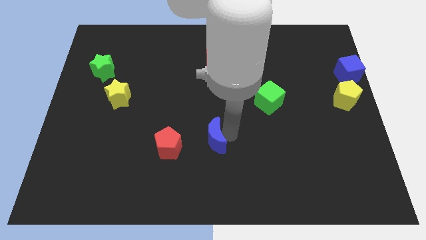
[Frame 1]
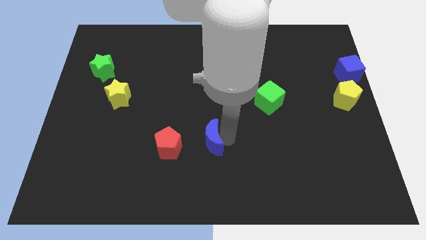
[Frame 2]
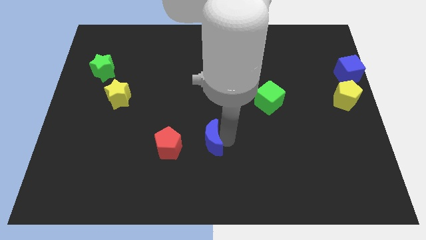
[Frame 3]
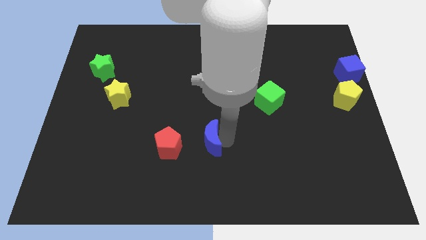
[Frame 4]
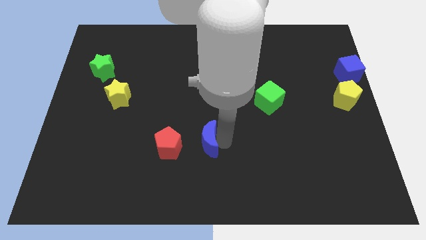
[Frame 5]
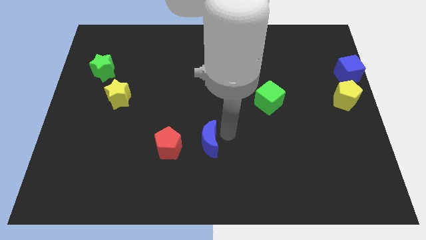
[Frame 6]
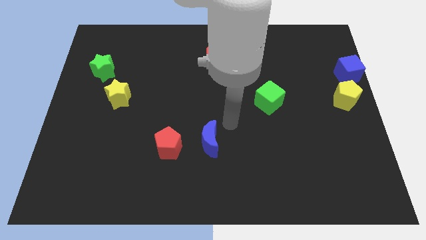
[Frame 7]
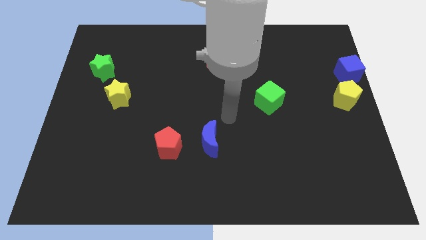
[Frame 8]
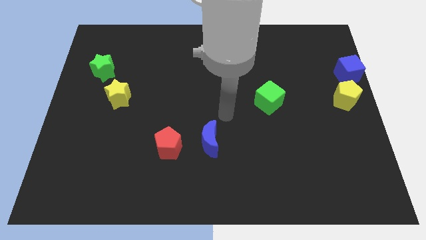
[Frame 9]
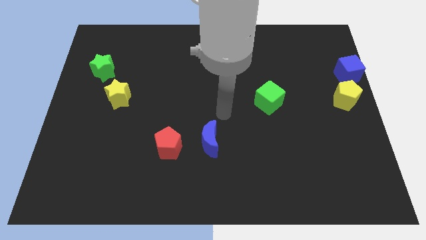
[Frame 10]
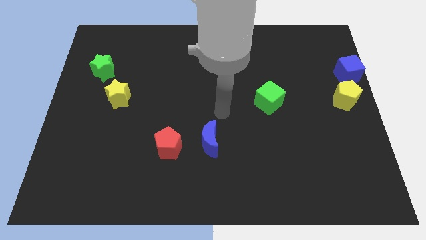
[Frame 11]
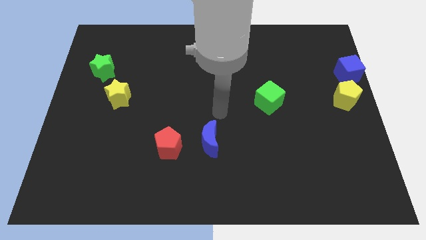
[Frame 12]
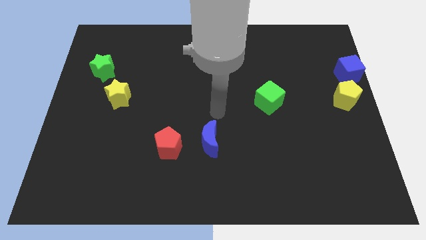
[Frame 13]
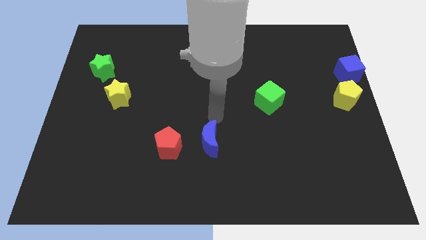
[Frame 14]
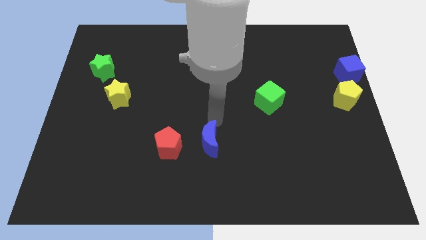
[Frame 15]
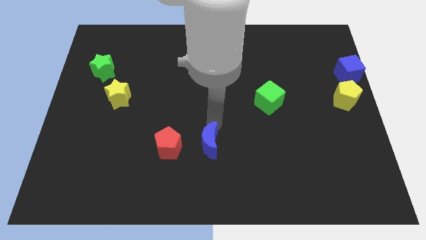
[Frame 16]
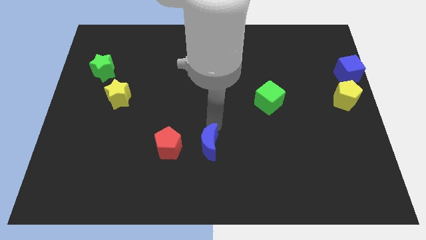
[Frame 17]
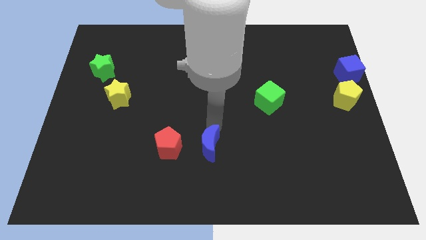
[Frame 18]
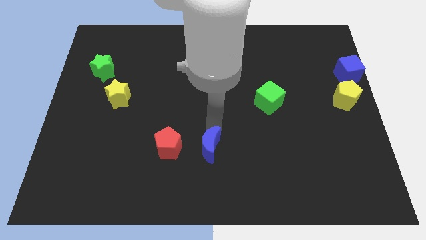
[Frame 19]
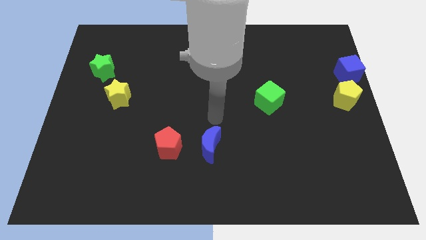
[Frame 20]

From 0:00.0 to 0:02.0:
put the blue crescent on the right side of the red pentagon

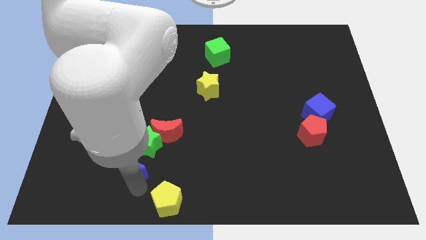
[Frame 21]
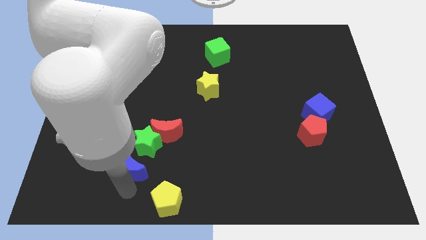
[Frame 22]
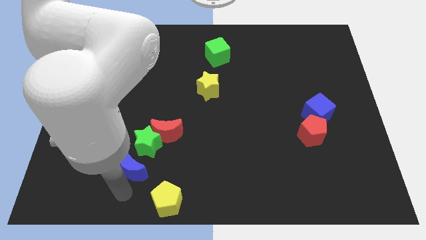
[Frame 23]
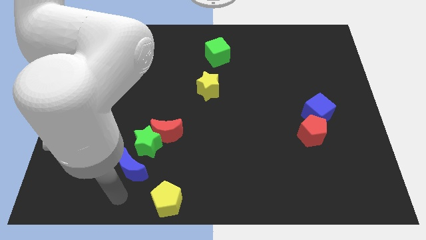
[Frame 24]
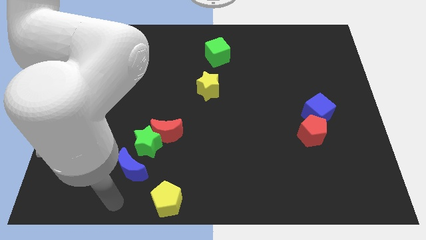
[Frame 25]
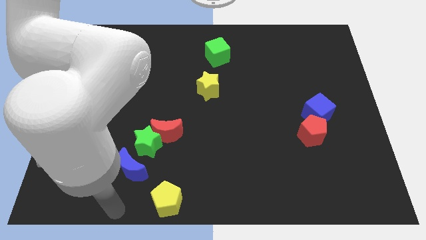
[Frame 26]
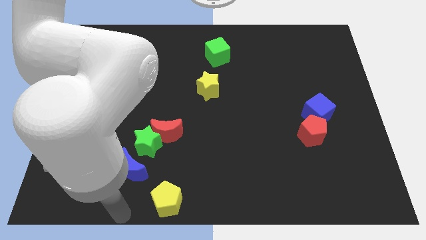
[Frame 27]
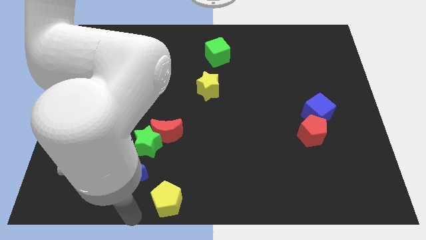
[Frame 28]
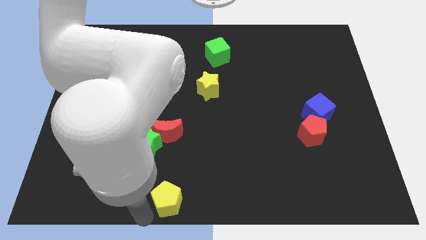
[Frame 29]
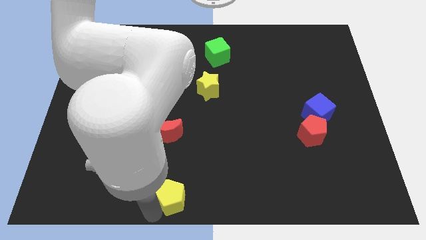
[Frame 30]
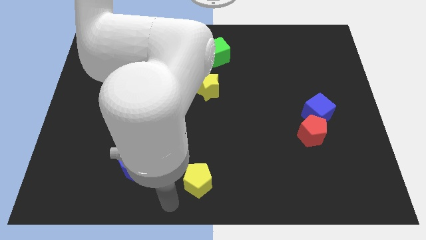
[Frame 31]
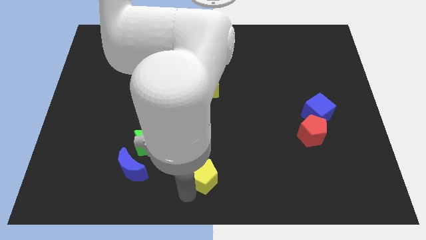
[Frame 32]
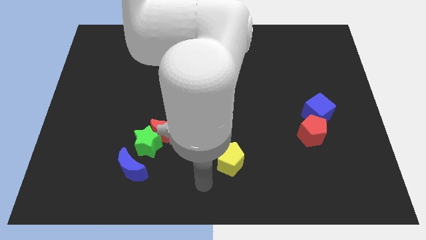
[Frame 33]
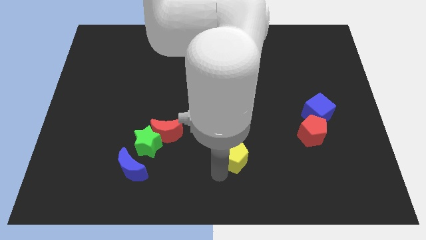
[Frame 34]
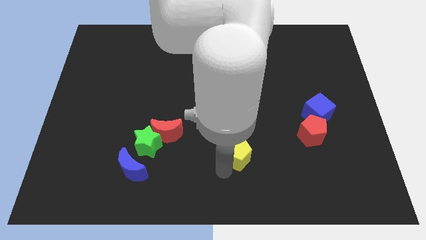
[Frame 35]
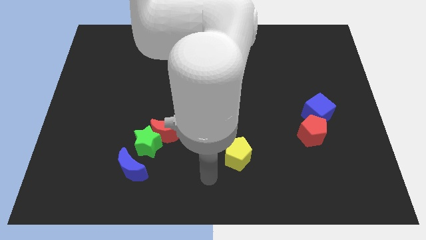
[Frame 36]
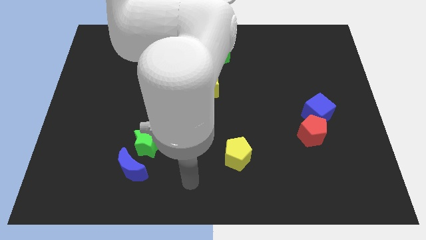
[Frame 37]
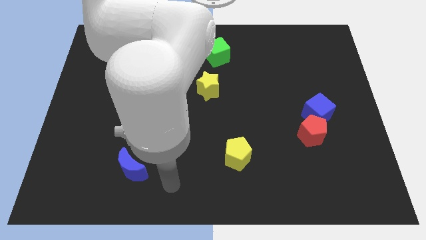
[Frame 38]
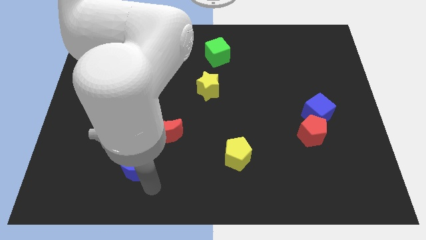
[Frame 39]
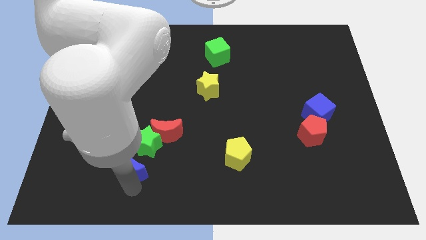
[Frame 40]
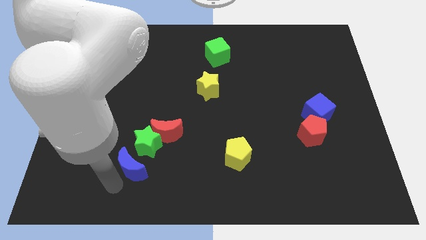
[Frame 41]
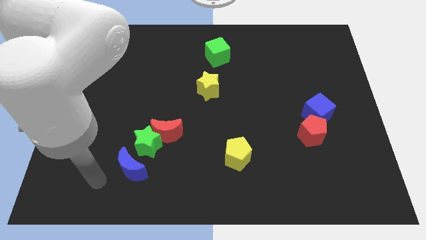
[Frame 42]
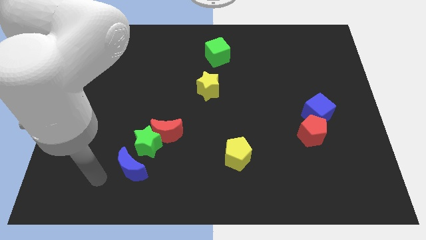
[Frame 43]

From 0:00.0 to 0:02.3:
move the yellow pentagon to the right of the green star

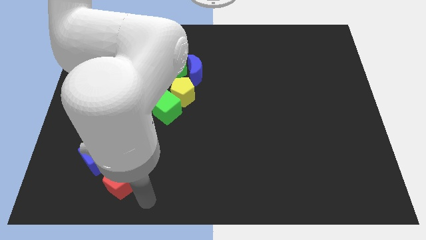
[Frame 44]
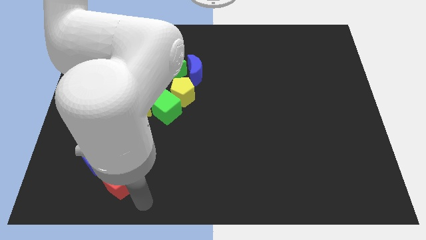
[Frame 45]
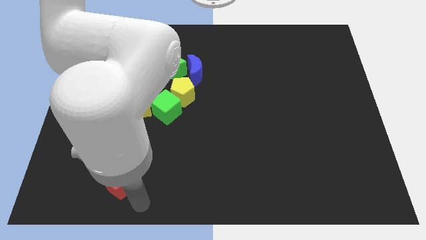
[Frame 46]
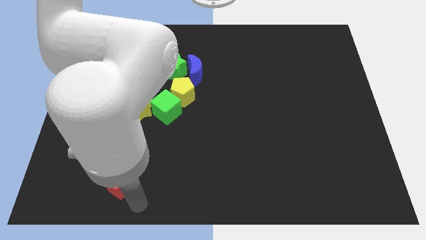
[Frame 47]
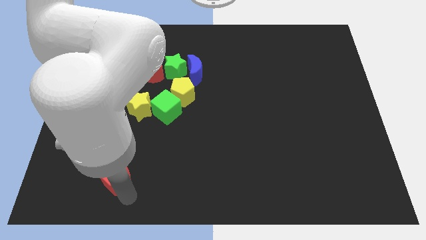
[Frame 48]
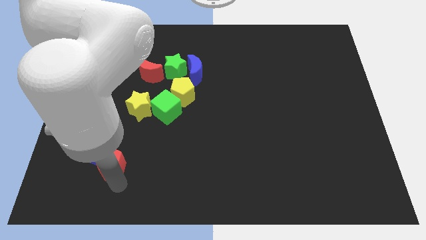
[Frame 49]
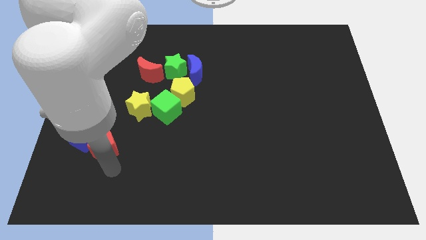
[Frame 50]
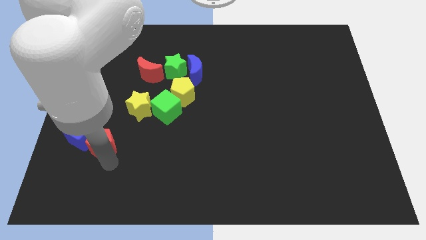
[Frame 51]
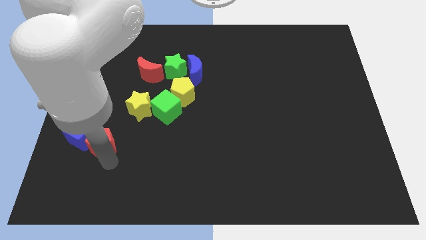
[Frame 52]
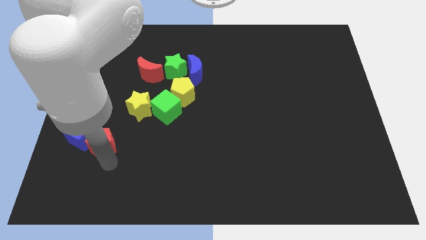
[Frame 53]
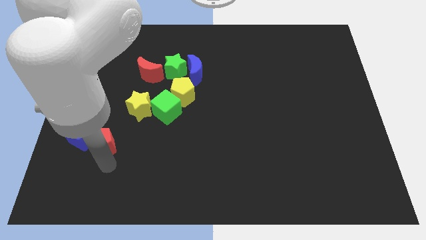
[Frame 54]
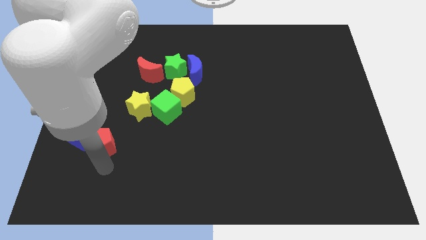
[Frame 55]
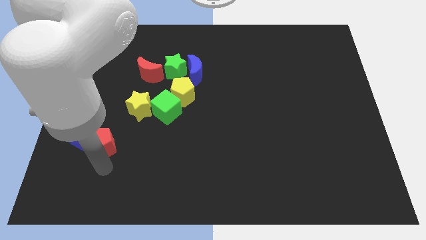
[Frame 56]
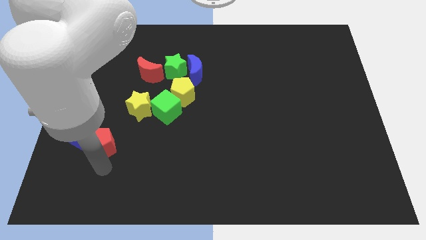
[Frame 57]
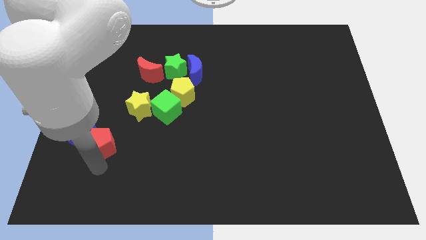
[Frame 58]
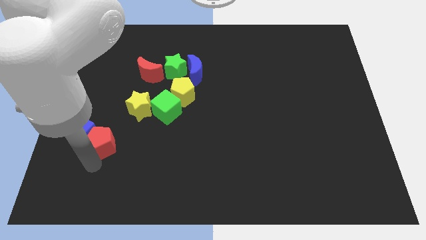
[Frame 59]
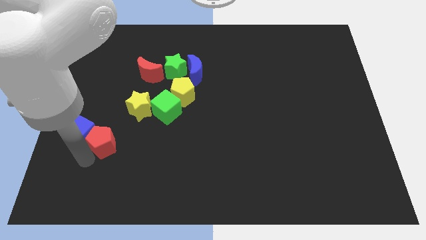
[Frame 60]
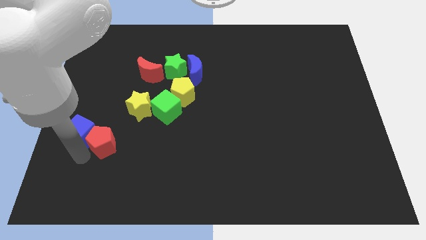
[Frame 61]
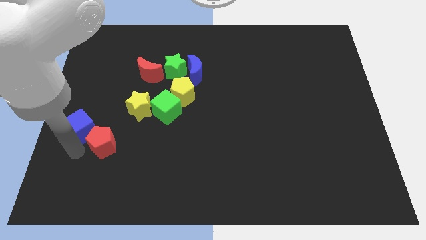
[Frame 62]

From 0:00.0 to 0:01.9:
push the red pentagon into the blue cube

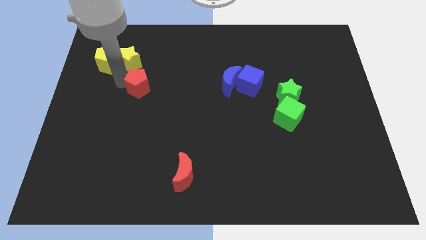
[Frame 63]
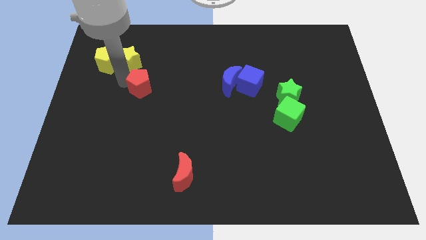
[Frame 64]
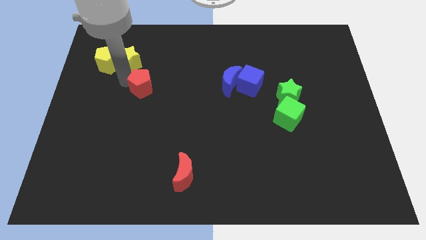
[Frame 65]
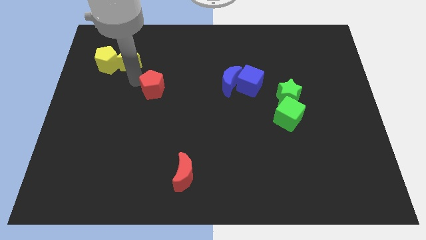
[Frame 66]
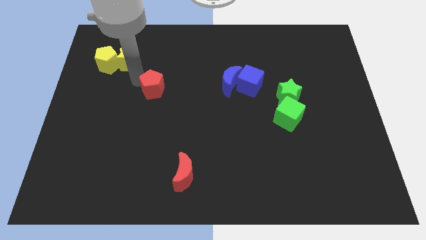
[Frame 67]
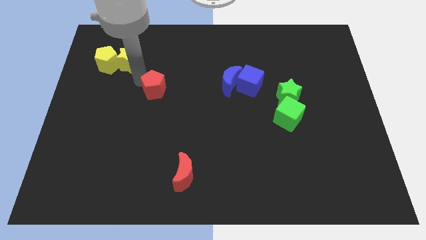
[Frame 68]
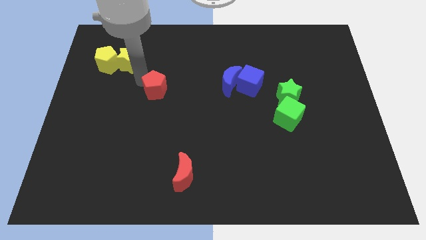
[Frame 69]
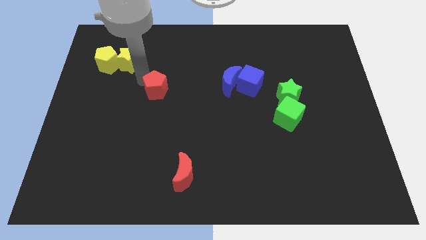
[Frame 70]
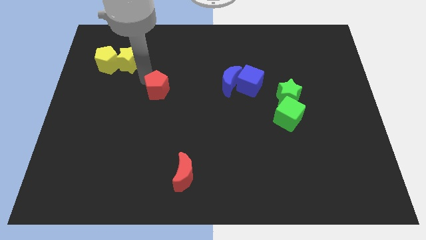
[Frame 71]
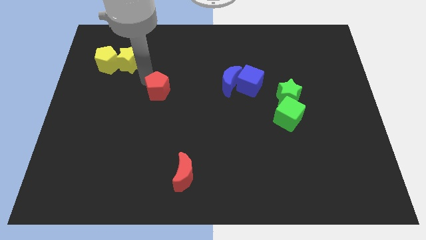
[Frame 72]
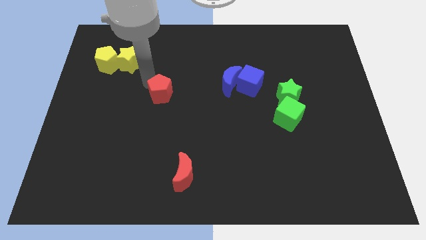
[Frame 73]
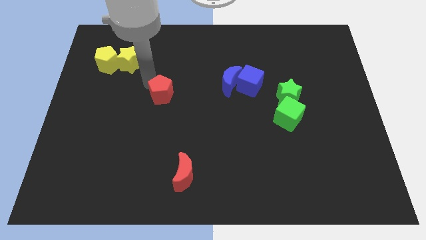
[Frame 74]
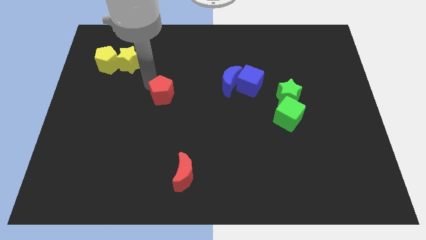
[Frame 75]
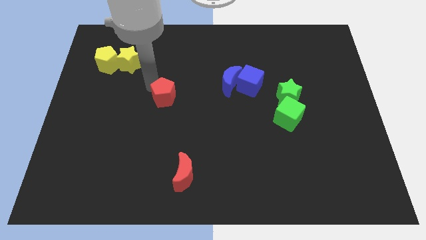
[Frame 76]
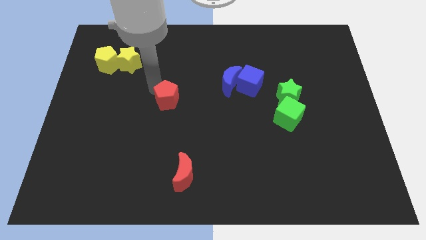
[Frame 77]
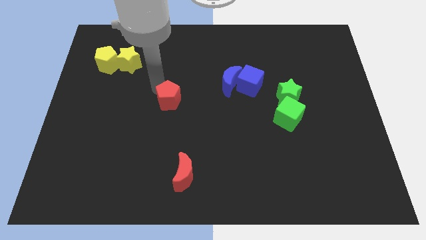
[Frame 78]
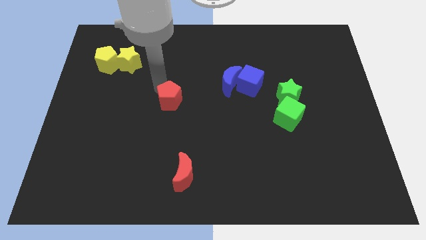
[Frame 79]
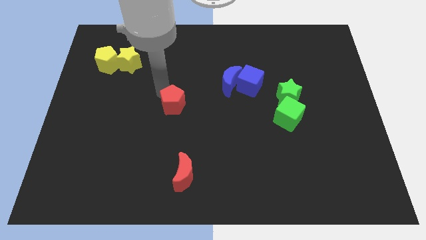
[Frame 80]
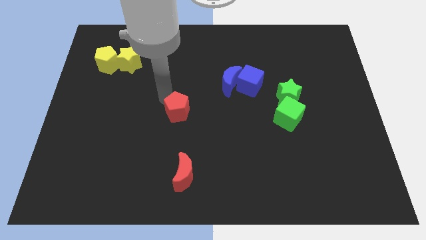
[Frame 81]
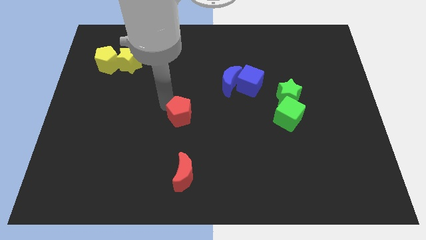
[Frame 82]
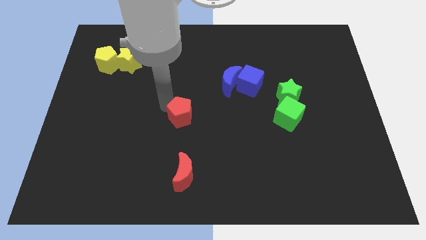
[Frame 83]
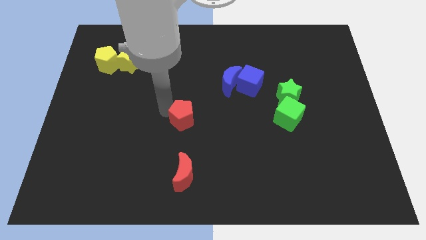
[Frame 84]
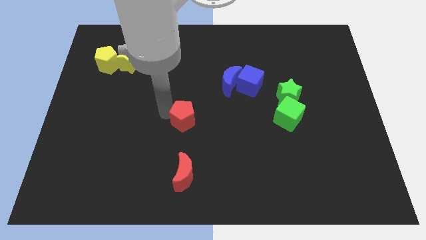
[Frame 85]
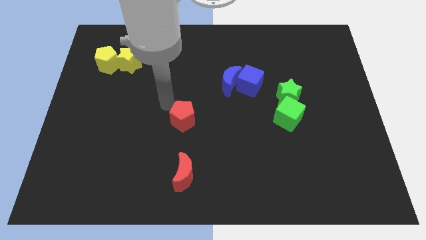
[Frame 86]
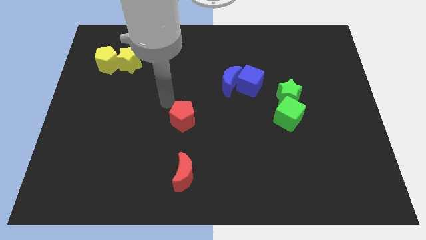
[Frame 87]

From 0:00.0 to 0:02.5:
push the red pentagon towards the top of the red moon

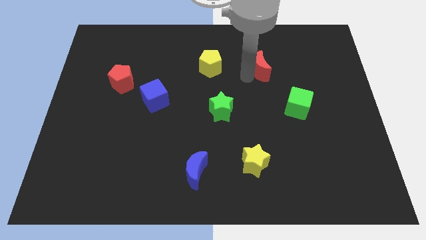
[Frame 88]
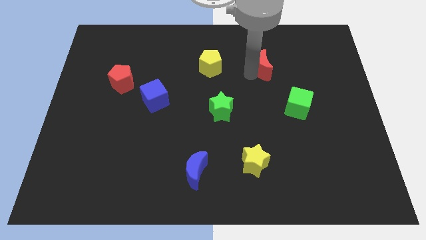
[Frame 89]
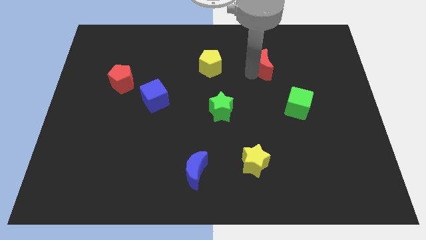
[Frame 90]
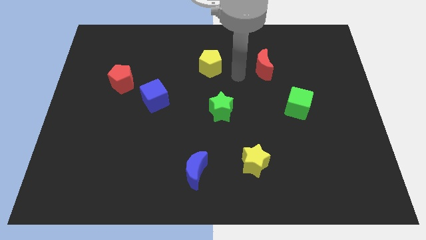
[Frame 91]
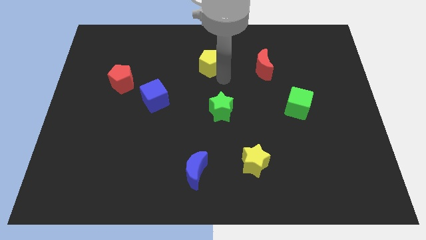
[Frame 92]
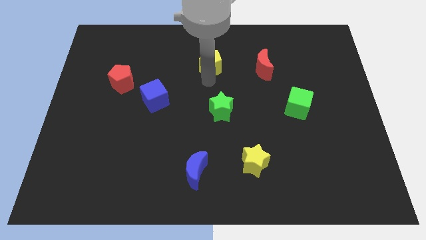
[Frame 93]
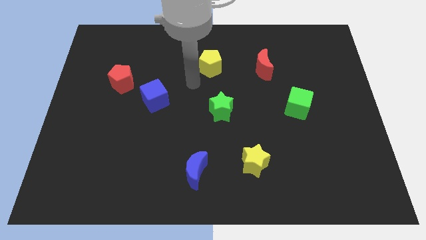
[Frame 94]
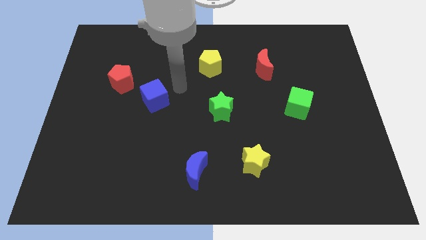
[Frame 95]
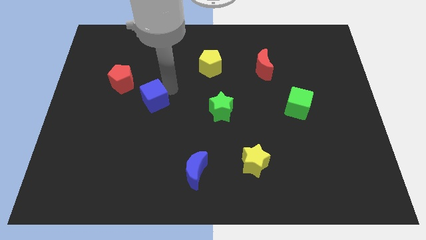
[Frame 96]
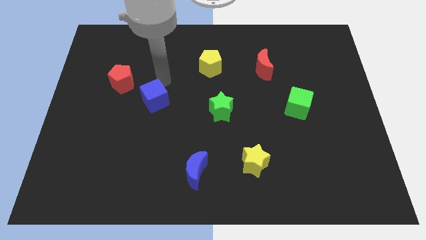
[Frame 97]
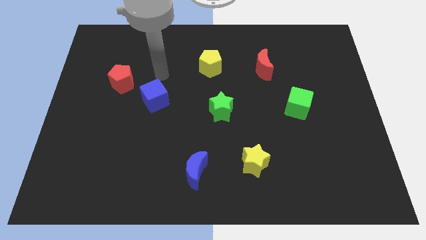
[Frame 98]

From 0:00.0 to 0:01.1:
move your arm away from red moon
